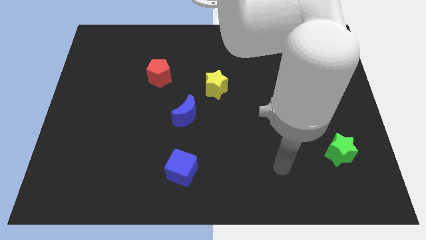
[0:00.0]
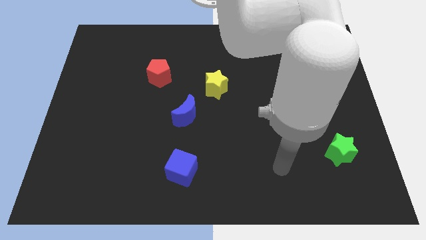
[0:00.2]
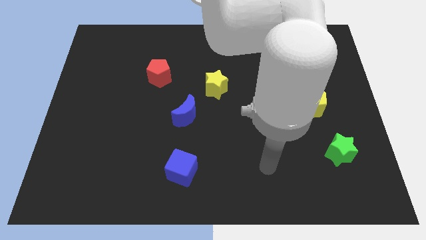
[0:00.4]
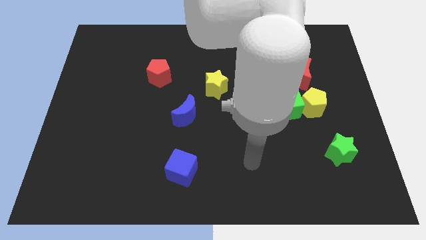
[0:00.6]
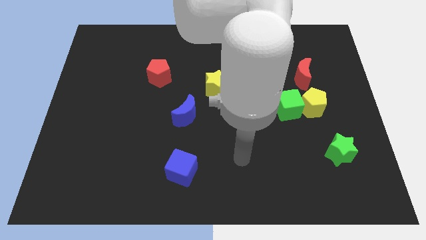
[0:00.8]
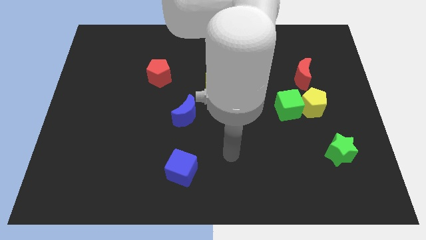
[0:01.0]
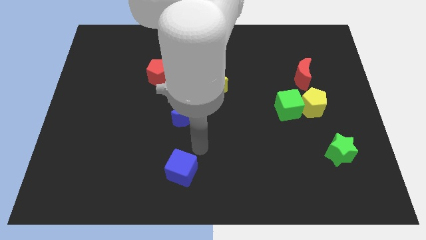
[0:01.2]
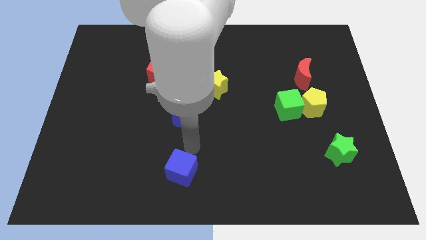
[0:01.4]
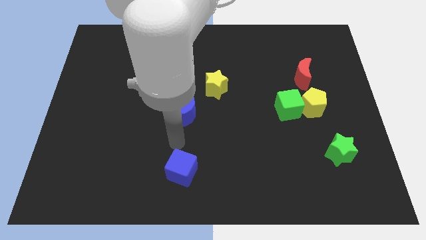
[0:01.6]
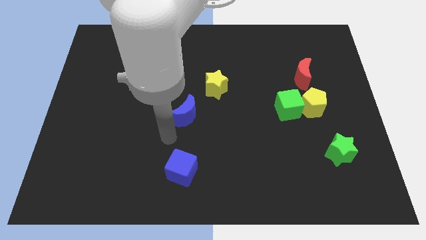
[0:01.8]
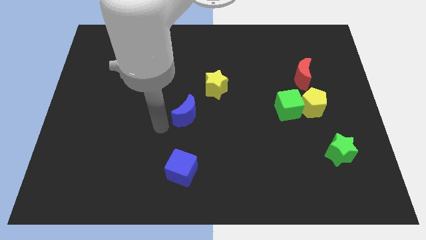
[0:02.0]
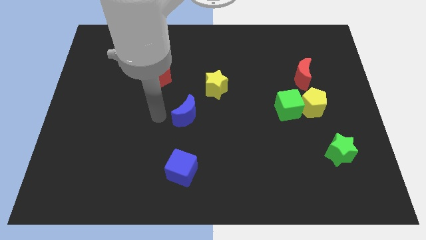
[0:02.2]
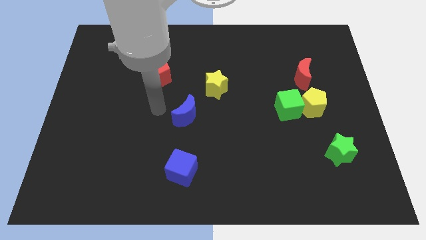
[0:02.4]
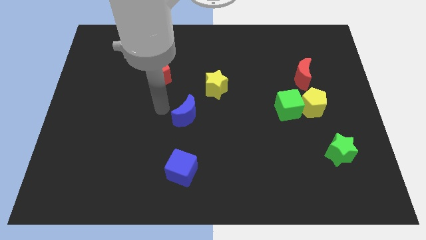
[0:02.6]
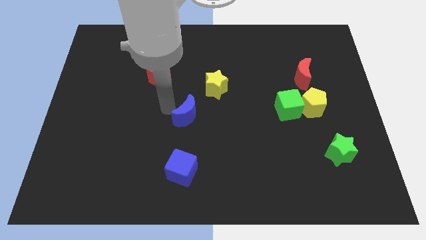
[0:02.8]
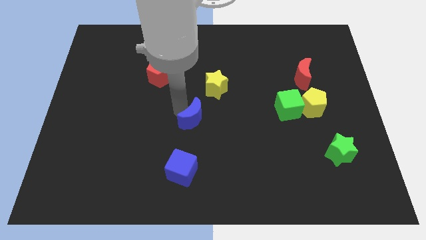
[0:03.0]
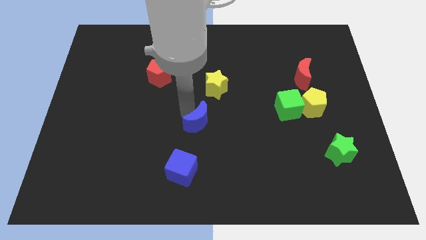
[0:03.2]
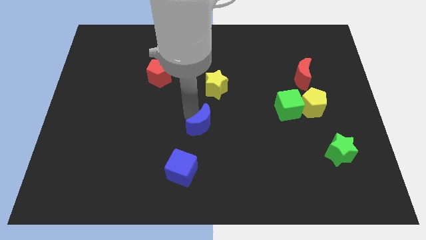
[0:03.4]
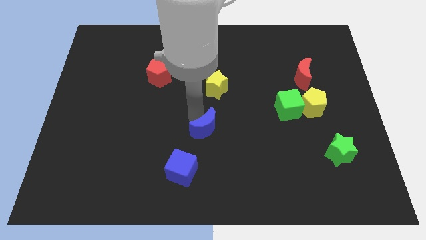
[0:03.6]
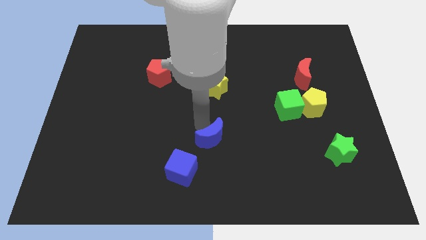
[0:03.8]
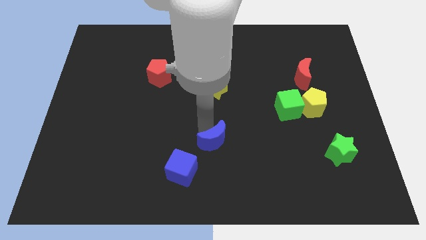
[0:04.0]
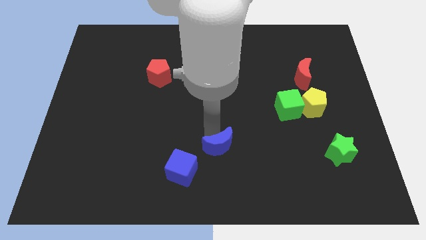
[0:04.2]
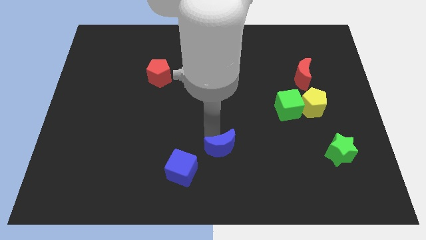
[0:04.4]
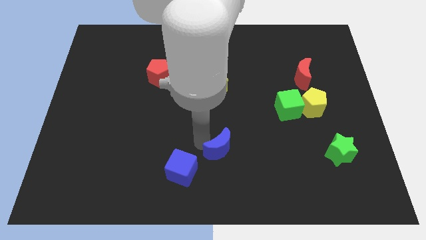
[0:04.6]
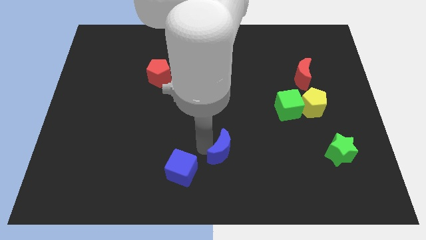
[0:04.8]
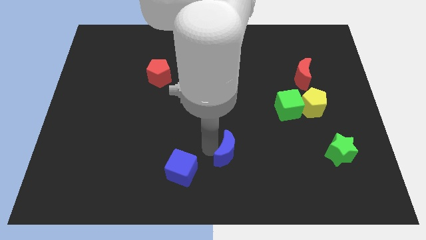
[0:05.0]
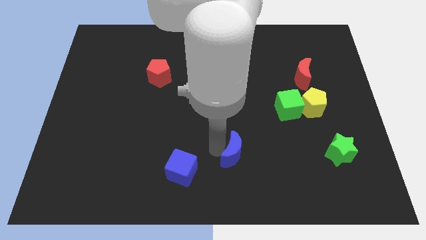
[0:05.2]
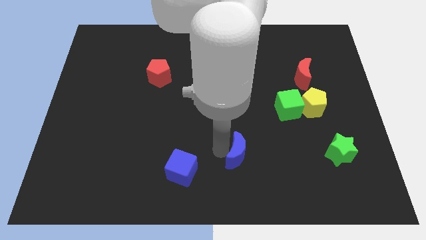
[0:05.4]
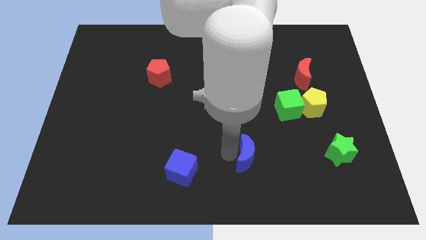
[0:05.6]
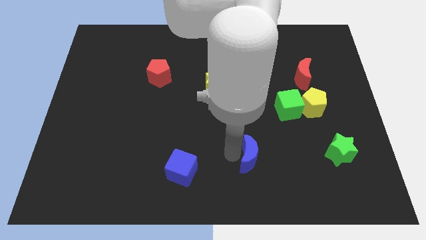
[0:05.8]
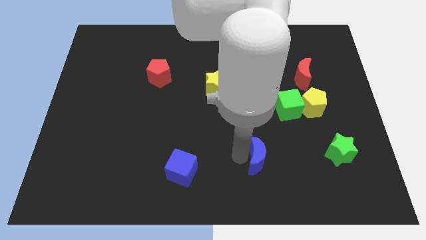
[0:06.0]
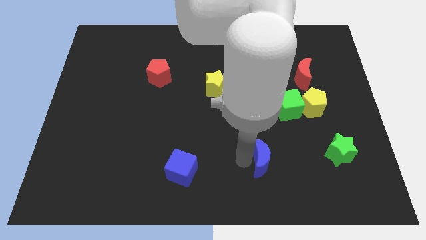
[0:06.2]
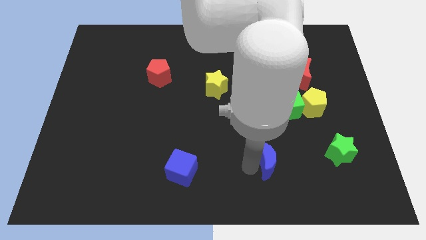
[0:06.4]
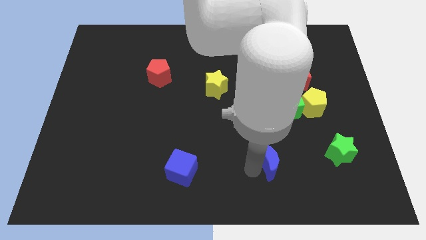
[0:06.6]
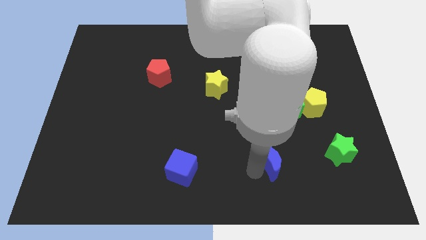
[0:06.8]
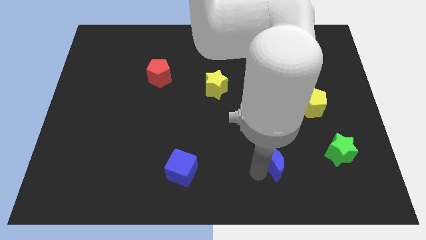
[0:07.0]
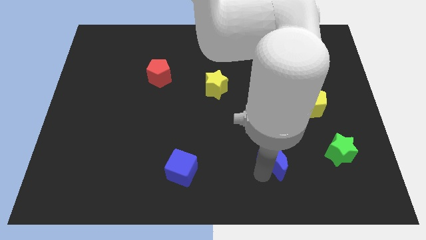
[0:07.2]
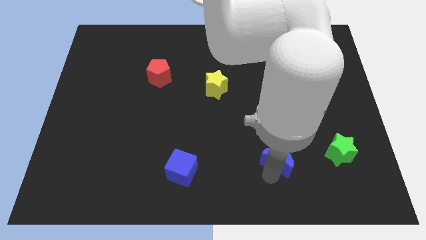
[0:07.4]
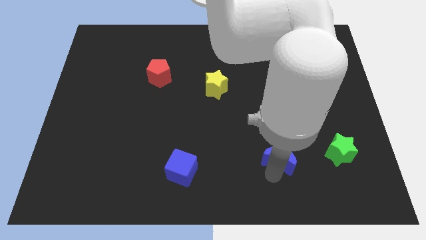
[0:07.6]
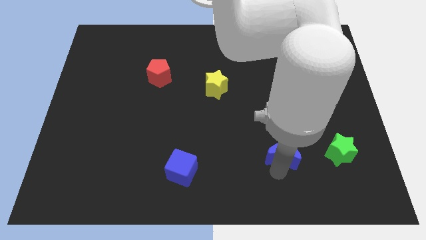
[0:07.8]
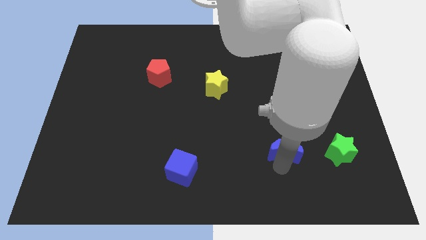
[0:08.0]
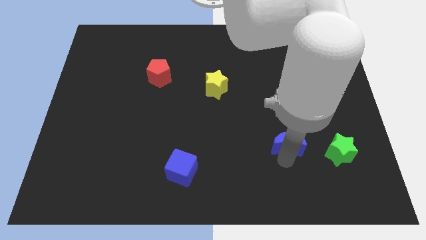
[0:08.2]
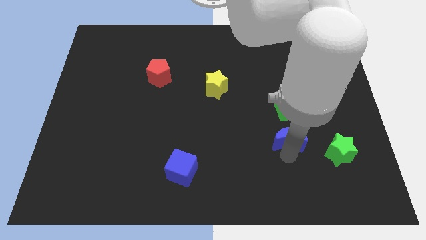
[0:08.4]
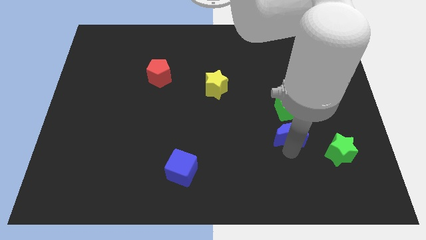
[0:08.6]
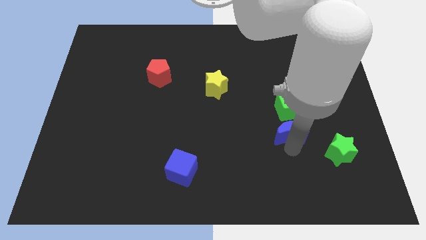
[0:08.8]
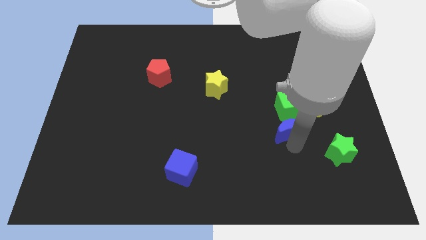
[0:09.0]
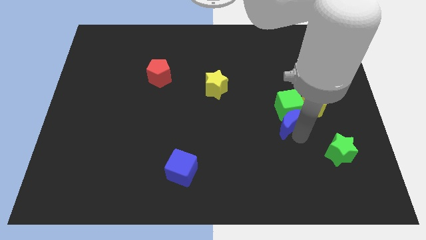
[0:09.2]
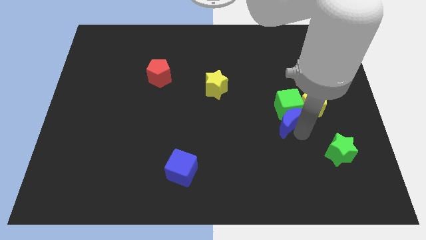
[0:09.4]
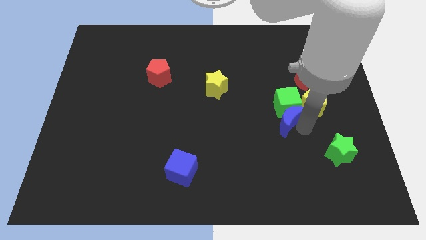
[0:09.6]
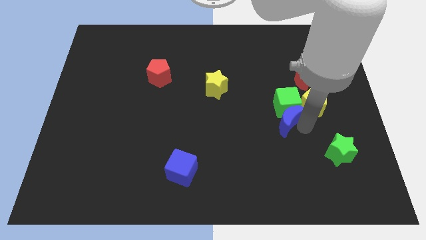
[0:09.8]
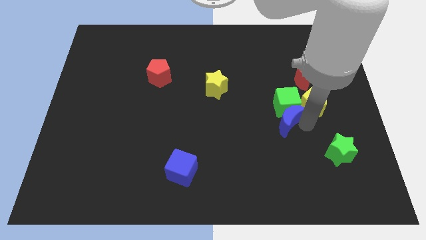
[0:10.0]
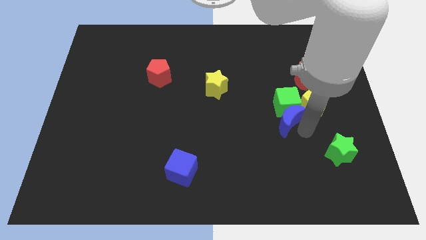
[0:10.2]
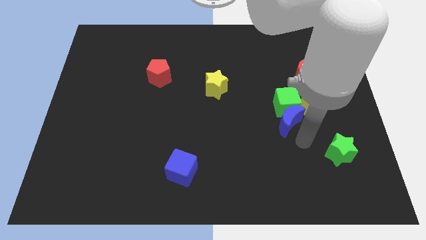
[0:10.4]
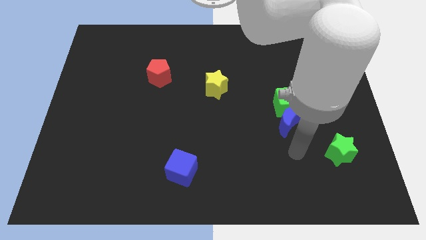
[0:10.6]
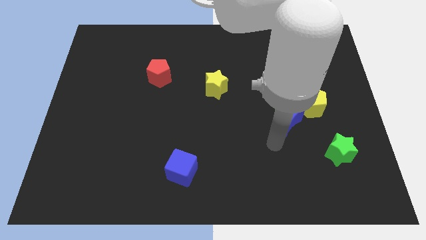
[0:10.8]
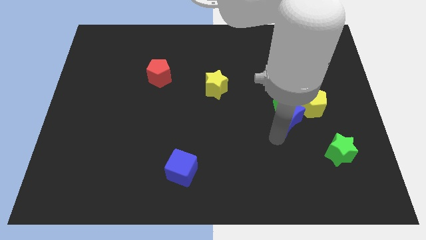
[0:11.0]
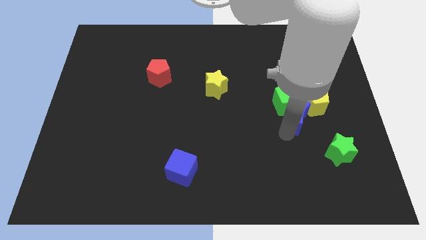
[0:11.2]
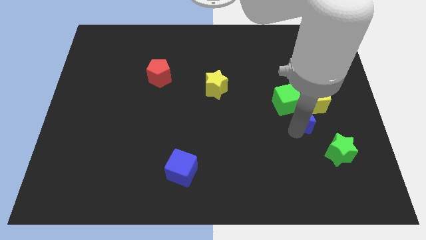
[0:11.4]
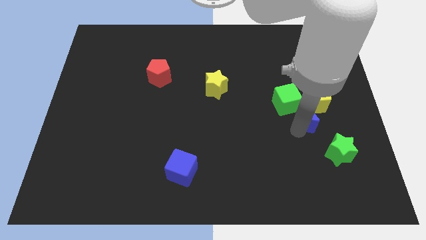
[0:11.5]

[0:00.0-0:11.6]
move the blue moon towards the yellow pentagon

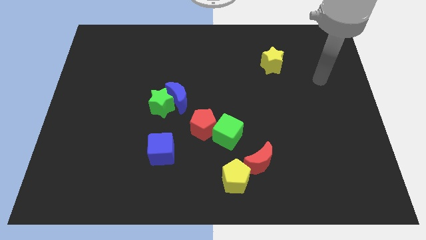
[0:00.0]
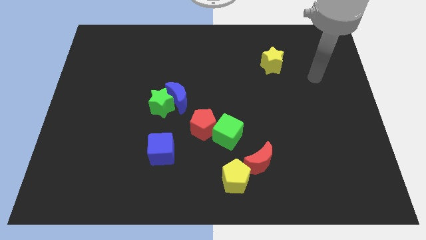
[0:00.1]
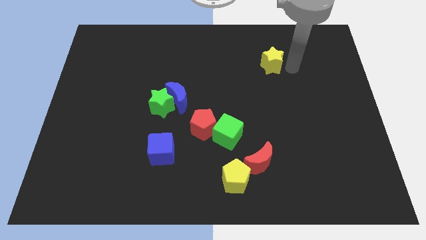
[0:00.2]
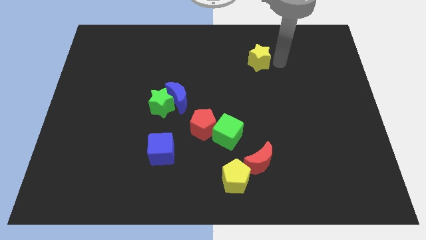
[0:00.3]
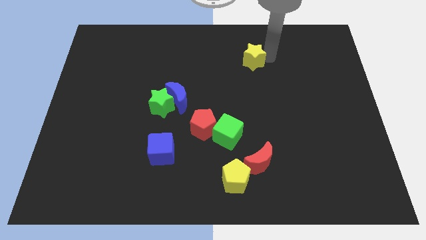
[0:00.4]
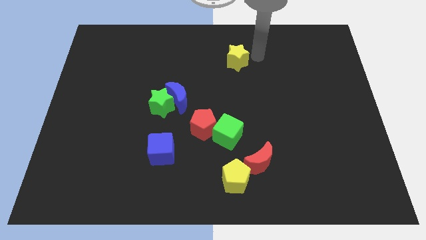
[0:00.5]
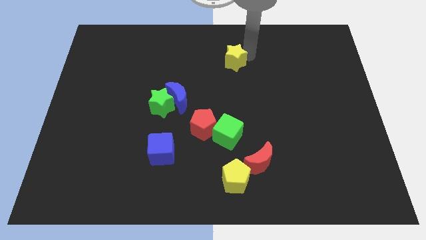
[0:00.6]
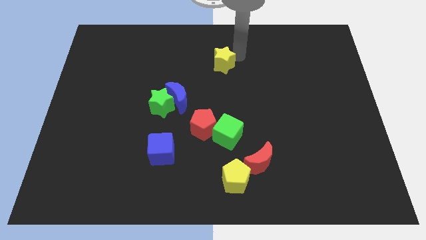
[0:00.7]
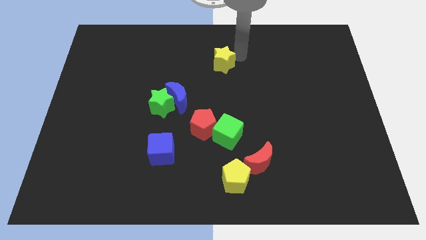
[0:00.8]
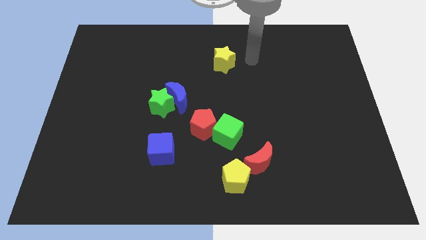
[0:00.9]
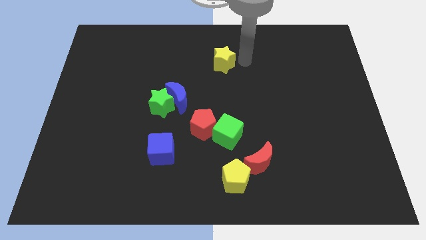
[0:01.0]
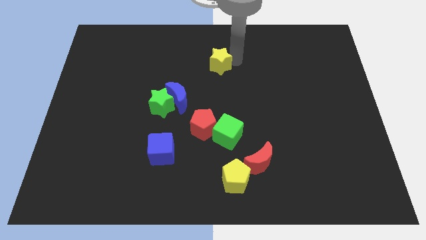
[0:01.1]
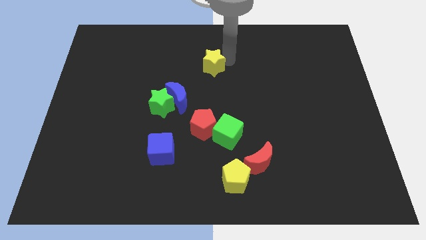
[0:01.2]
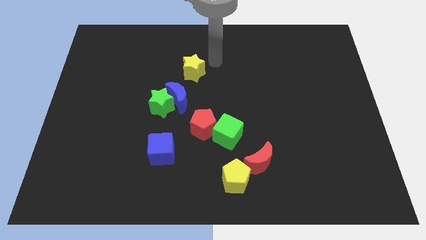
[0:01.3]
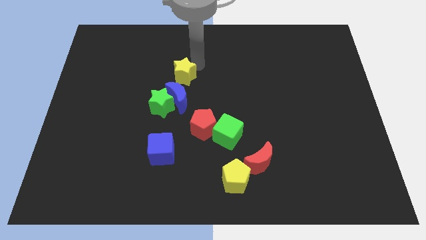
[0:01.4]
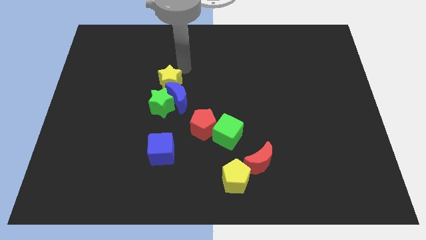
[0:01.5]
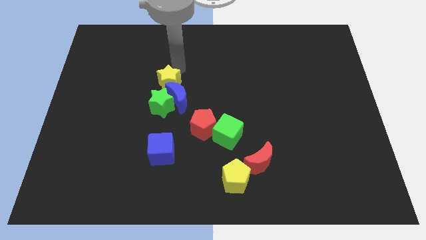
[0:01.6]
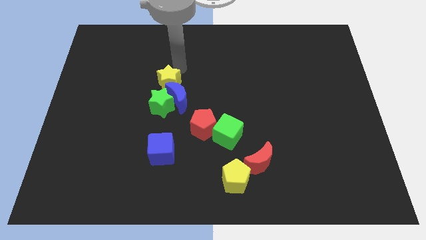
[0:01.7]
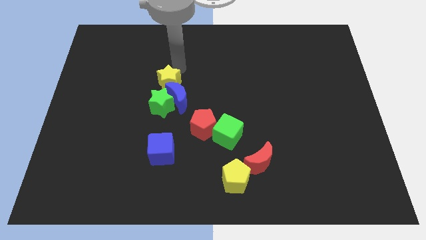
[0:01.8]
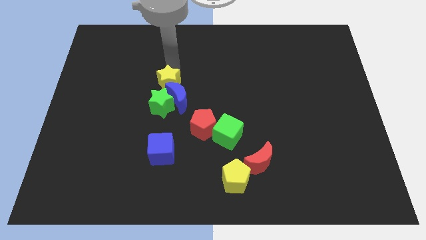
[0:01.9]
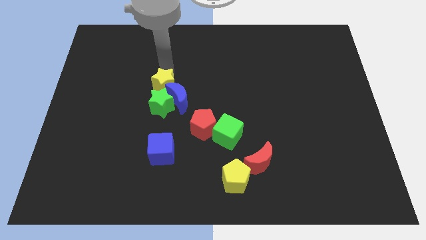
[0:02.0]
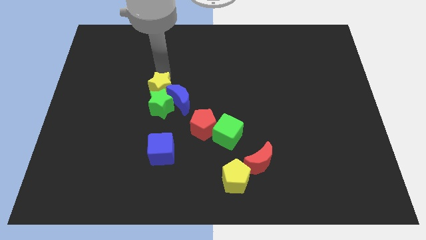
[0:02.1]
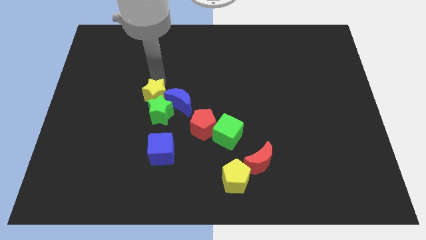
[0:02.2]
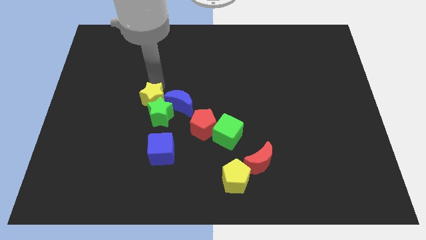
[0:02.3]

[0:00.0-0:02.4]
slide the yellow star close to the green star

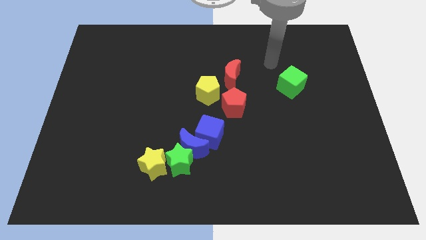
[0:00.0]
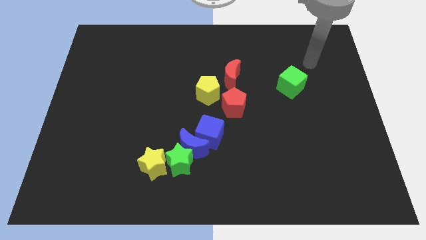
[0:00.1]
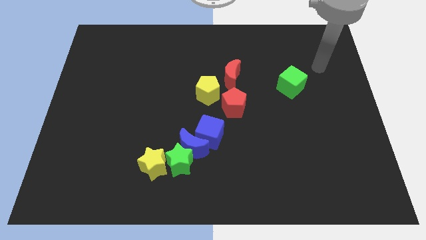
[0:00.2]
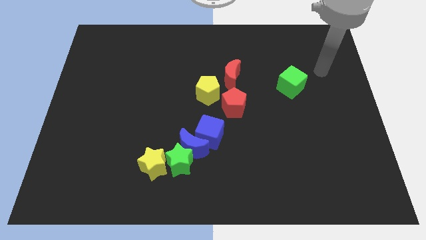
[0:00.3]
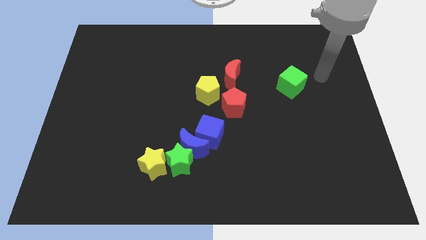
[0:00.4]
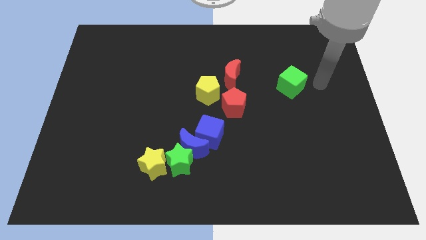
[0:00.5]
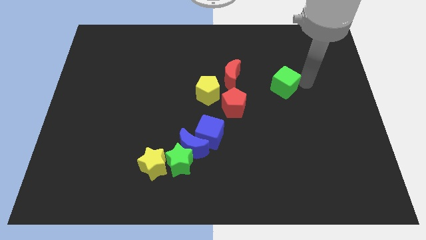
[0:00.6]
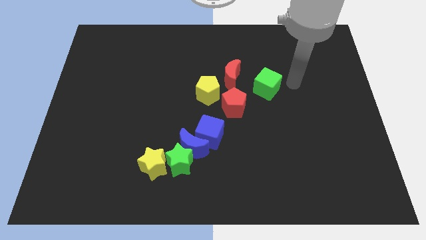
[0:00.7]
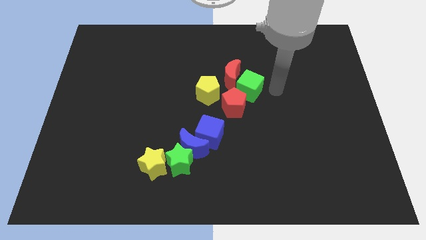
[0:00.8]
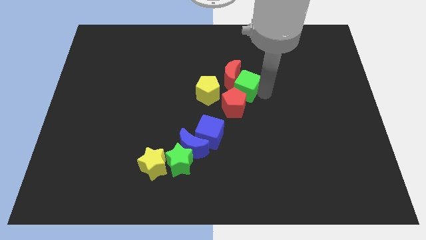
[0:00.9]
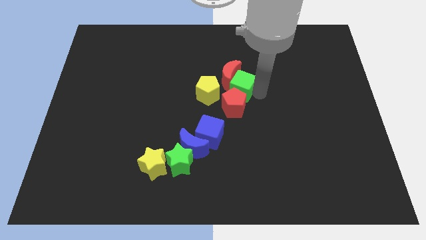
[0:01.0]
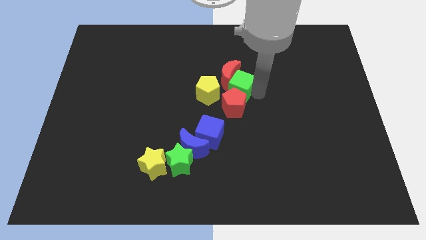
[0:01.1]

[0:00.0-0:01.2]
push the green cube next to the red pentagon
